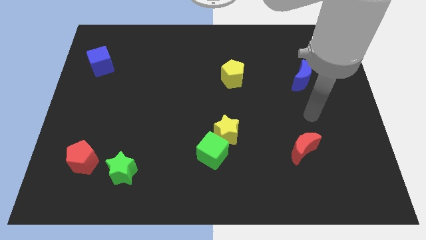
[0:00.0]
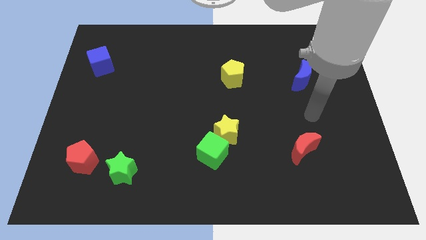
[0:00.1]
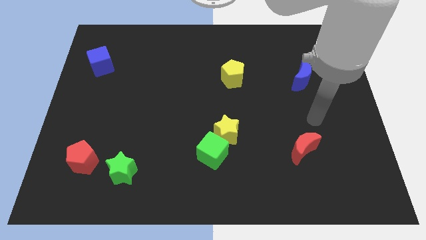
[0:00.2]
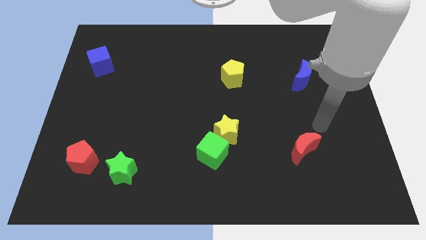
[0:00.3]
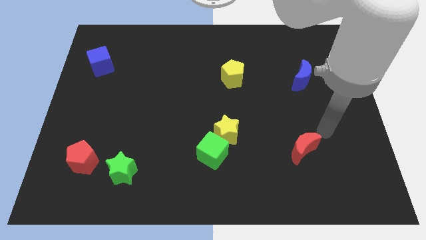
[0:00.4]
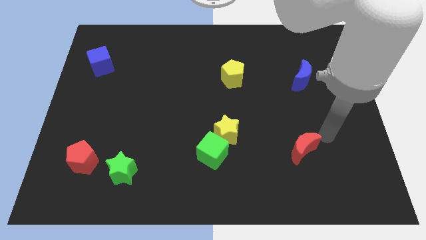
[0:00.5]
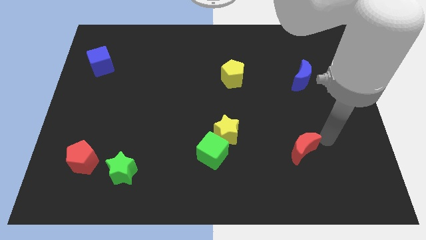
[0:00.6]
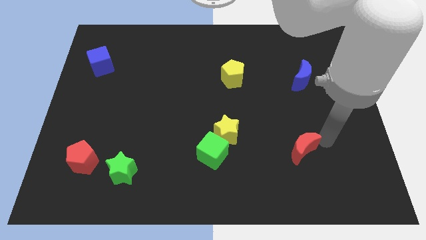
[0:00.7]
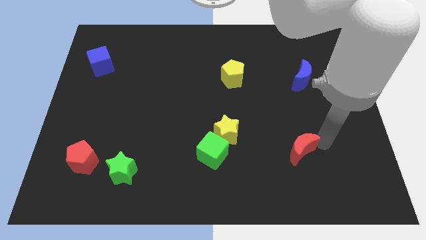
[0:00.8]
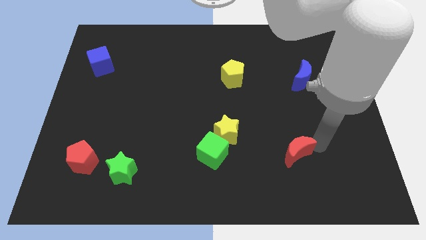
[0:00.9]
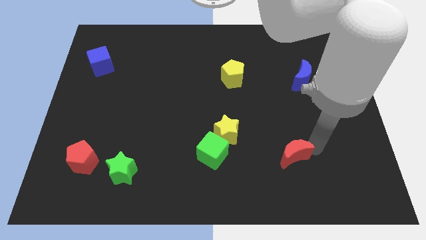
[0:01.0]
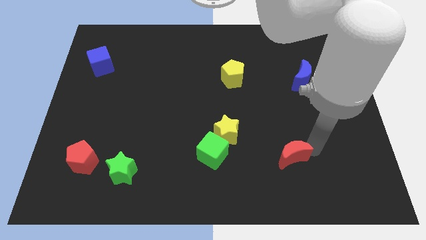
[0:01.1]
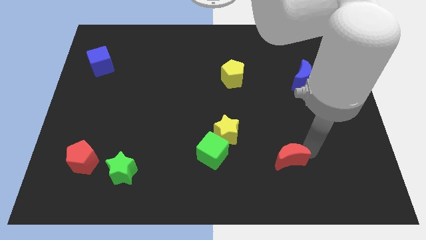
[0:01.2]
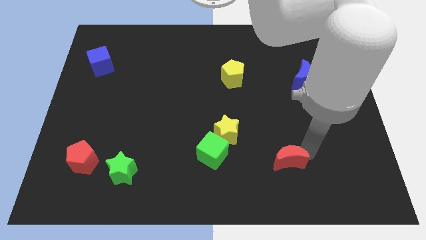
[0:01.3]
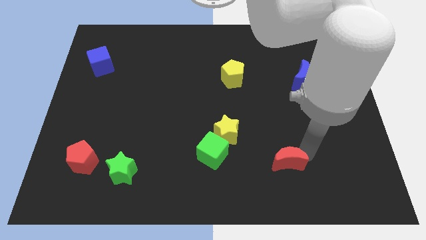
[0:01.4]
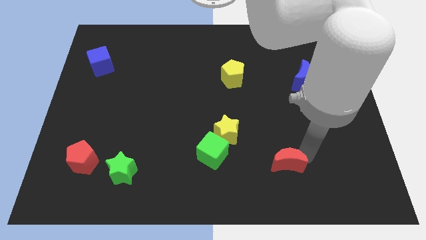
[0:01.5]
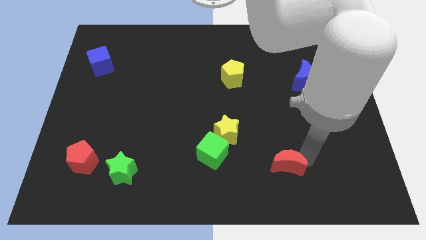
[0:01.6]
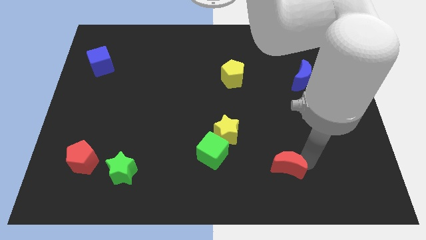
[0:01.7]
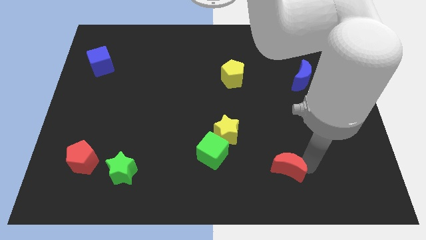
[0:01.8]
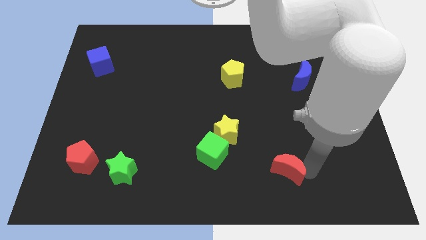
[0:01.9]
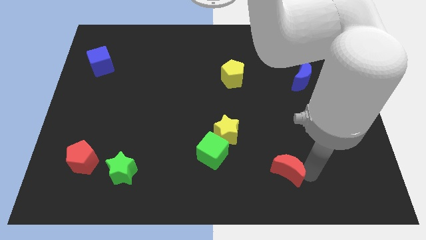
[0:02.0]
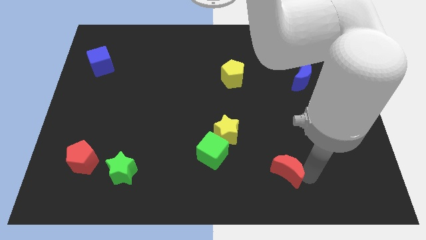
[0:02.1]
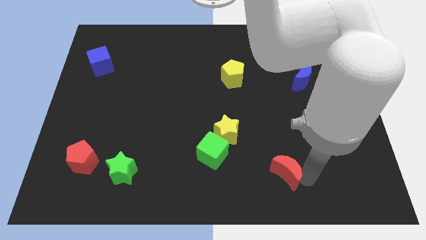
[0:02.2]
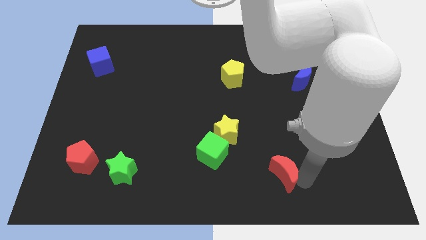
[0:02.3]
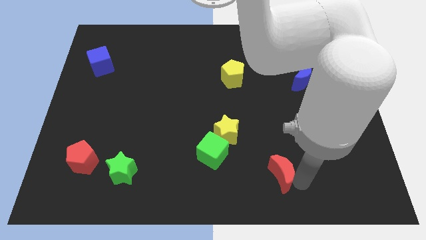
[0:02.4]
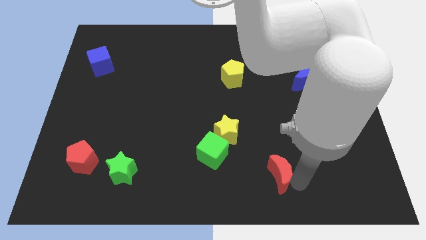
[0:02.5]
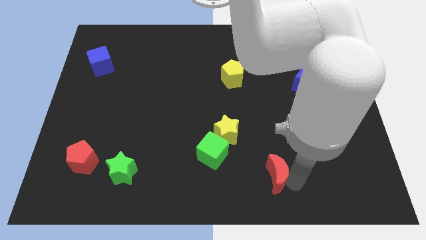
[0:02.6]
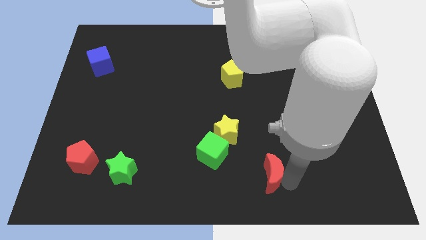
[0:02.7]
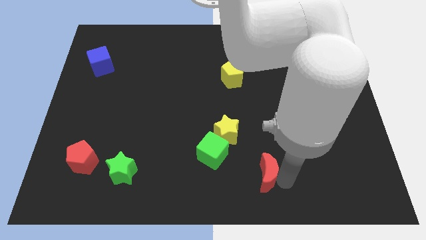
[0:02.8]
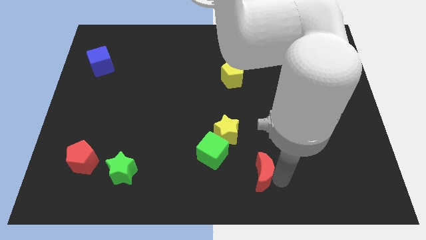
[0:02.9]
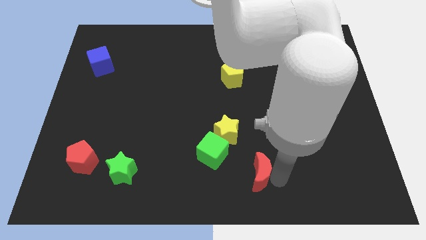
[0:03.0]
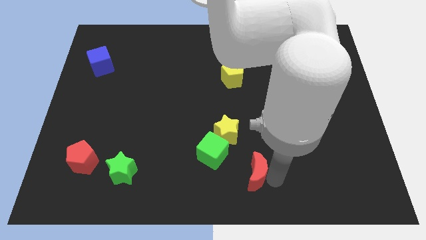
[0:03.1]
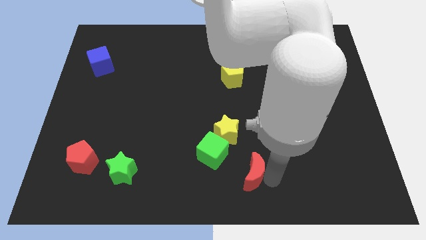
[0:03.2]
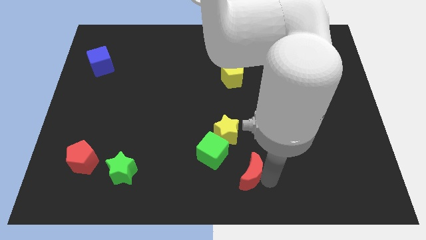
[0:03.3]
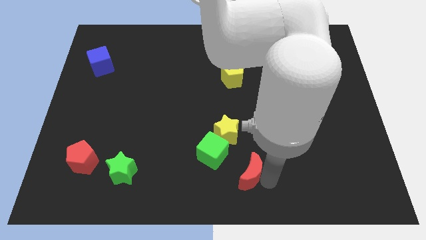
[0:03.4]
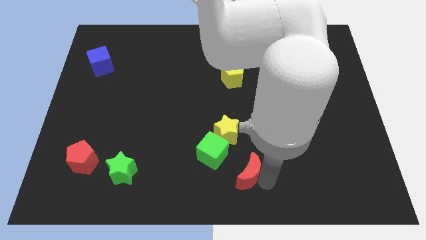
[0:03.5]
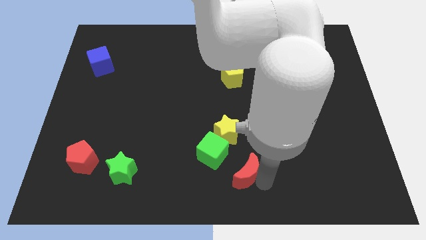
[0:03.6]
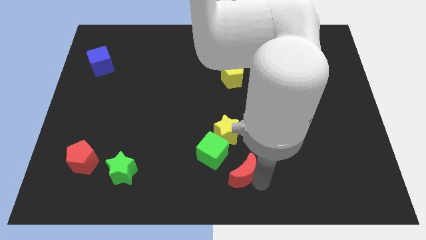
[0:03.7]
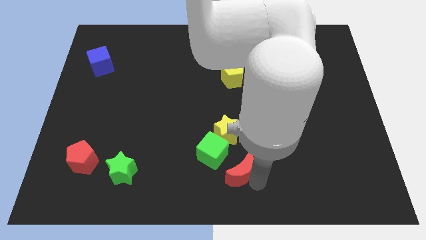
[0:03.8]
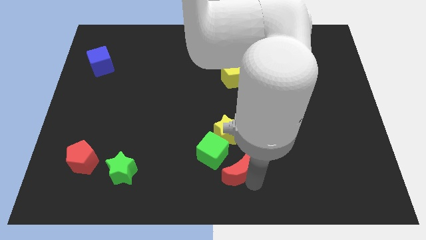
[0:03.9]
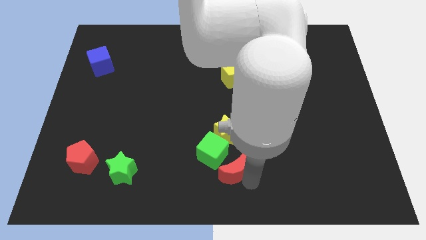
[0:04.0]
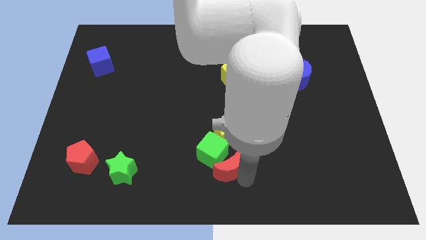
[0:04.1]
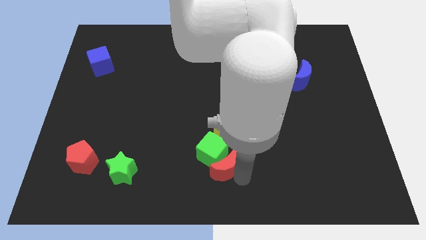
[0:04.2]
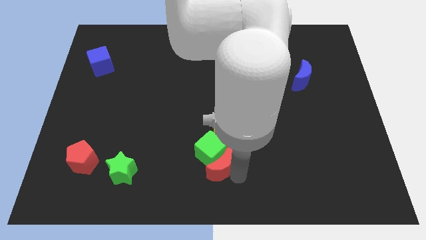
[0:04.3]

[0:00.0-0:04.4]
put the red moon towards the green cube

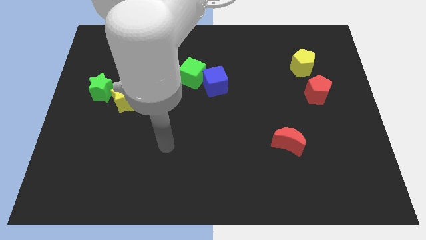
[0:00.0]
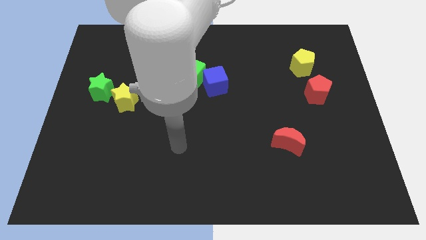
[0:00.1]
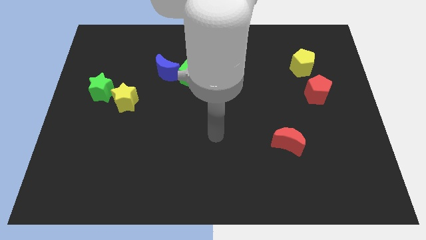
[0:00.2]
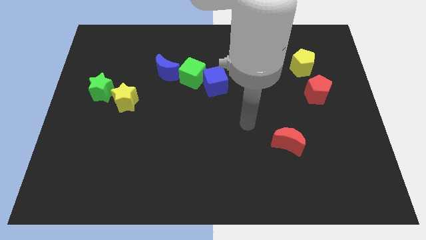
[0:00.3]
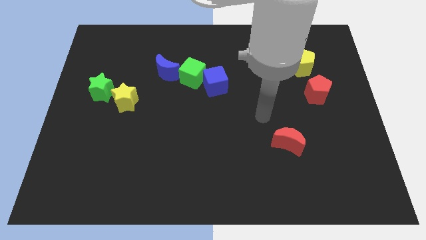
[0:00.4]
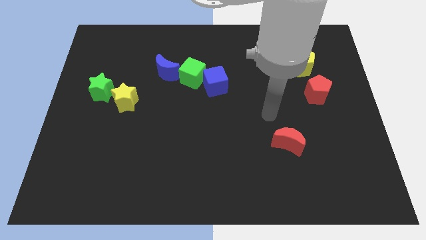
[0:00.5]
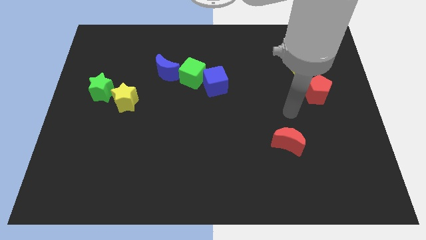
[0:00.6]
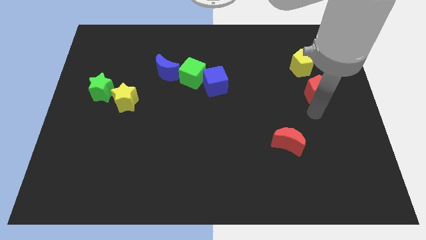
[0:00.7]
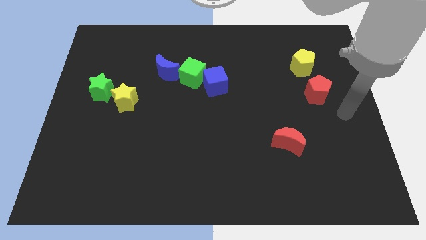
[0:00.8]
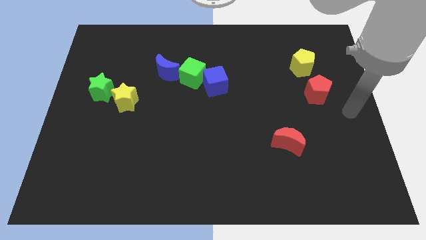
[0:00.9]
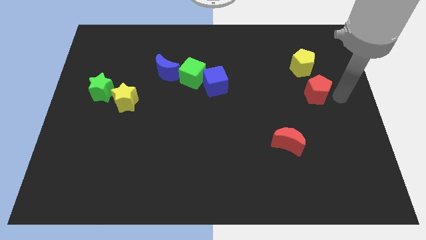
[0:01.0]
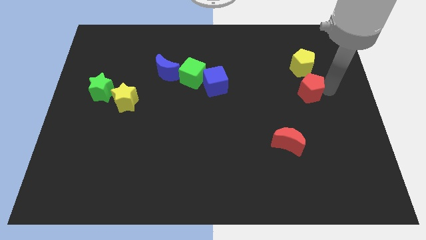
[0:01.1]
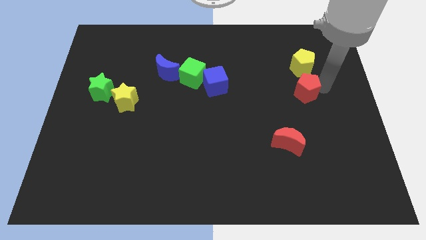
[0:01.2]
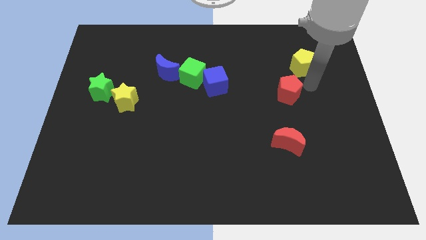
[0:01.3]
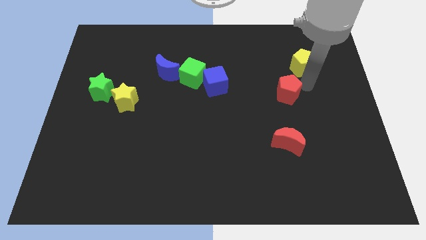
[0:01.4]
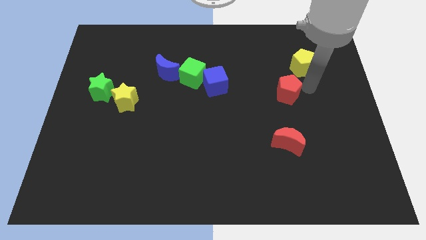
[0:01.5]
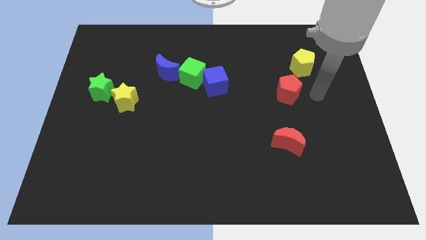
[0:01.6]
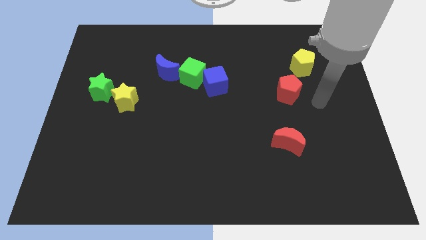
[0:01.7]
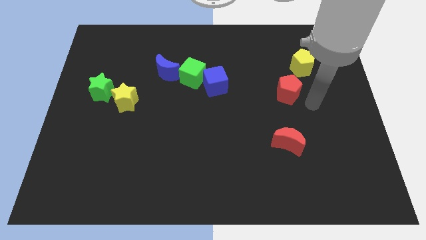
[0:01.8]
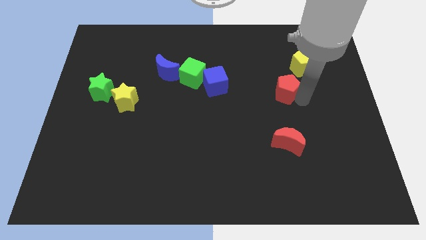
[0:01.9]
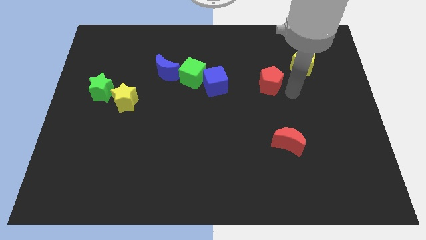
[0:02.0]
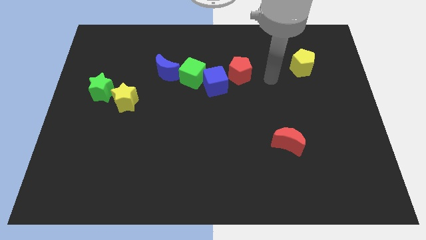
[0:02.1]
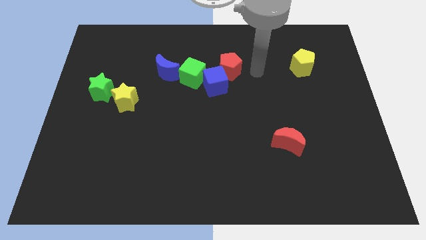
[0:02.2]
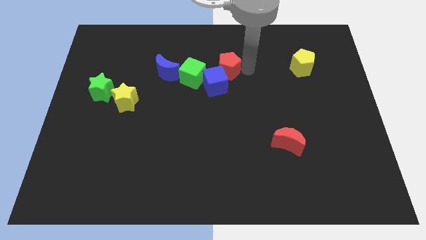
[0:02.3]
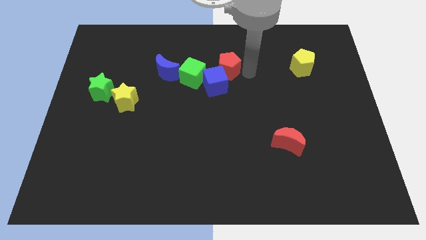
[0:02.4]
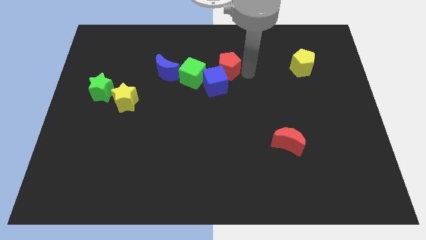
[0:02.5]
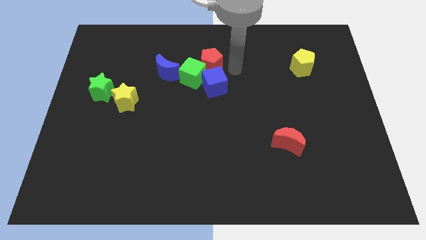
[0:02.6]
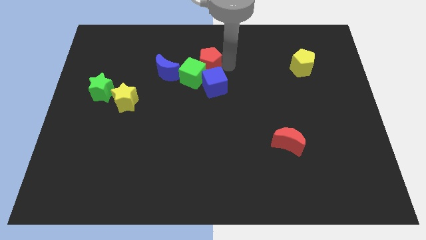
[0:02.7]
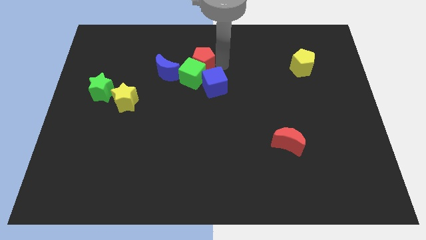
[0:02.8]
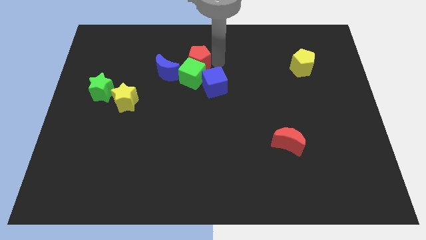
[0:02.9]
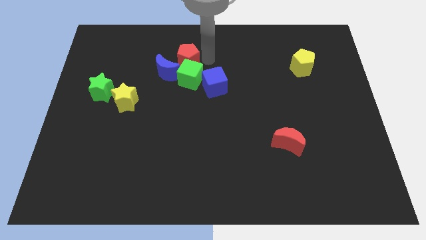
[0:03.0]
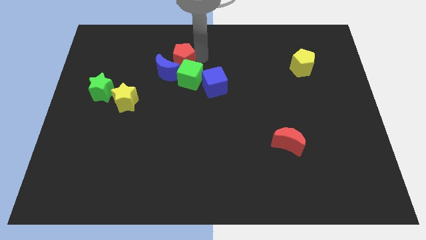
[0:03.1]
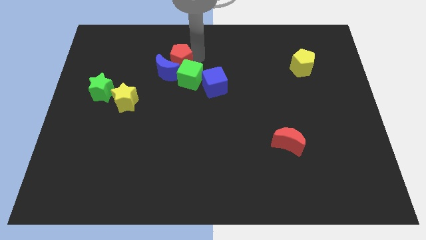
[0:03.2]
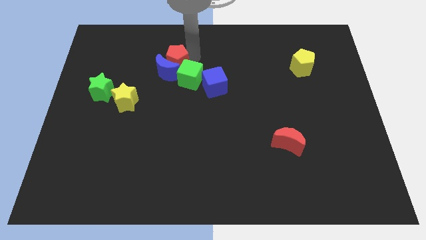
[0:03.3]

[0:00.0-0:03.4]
move the red pentagon close to the blue moon
